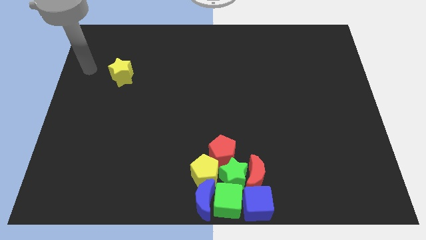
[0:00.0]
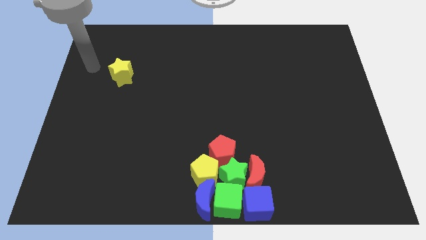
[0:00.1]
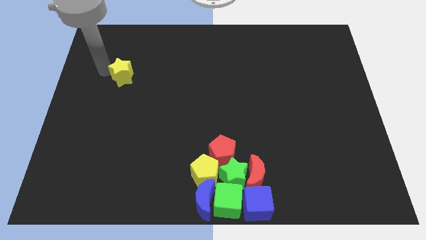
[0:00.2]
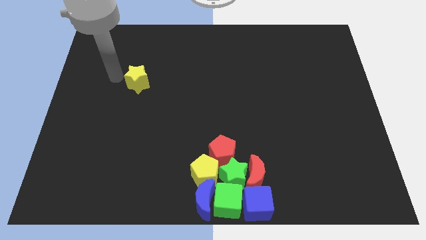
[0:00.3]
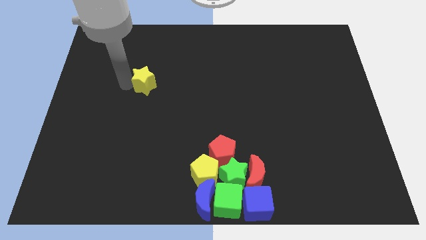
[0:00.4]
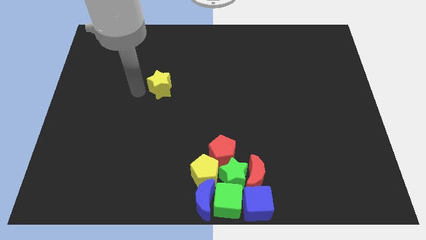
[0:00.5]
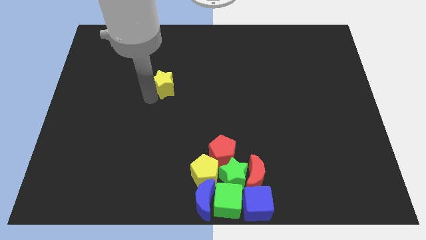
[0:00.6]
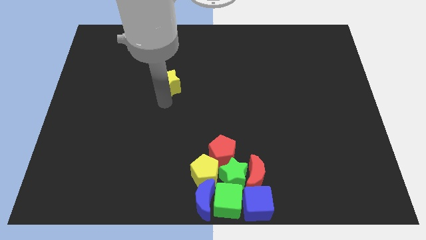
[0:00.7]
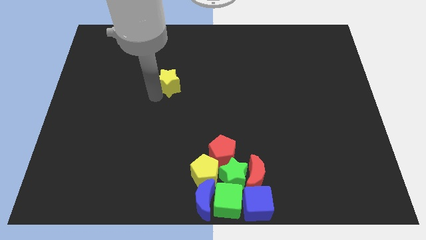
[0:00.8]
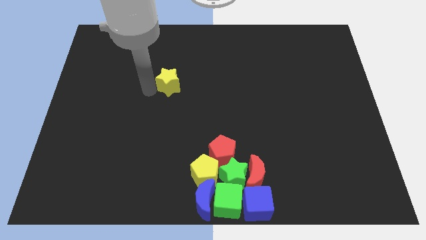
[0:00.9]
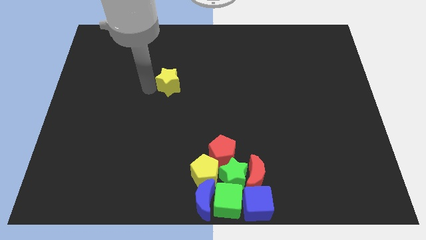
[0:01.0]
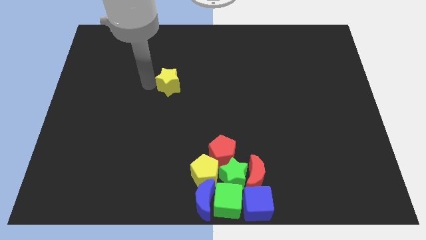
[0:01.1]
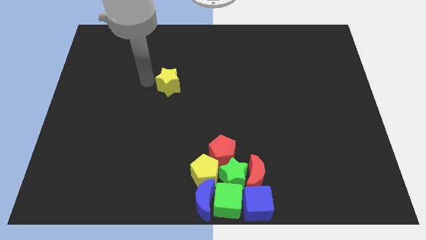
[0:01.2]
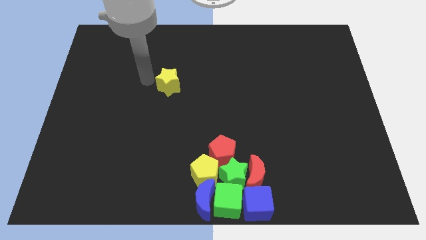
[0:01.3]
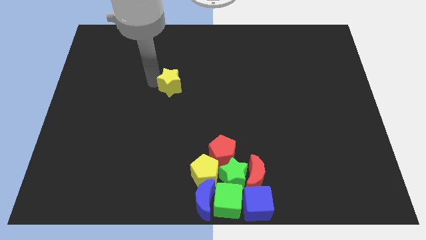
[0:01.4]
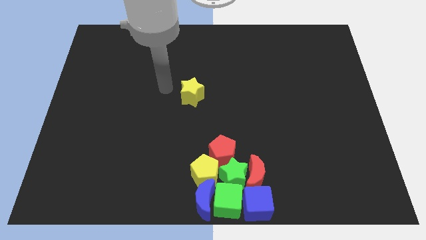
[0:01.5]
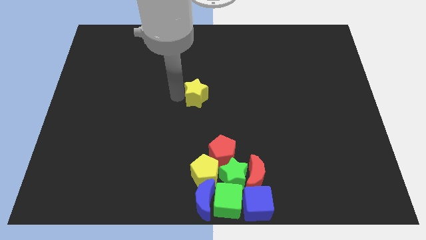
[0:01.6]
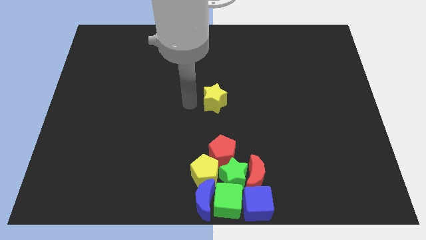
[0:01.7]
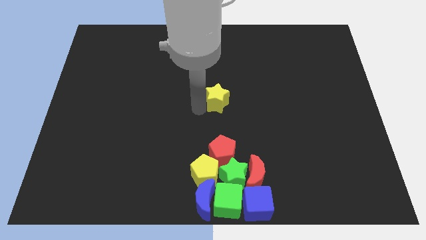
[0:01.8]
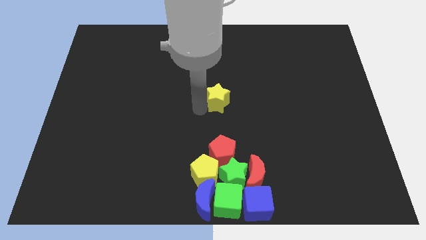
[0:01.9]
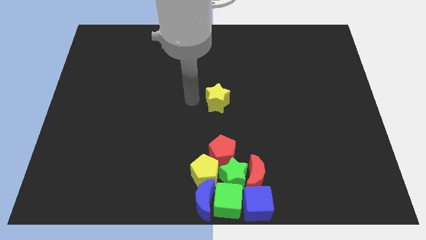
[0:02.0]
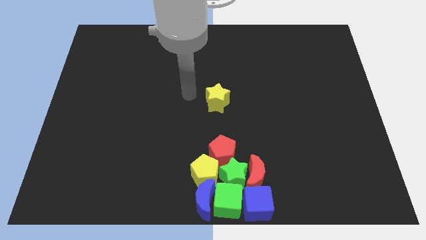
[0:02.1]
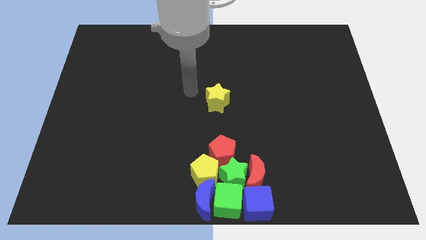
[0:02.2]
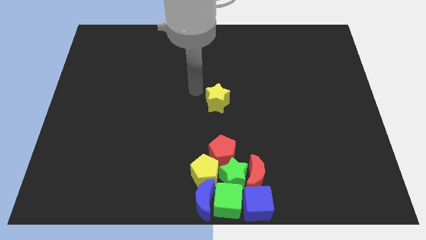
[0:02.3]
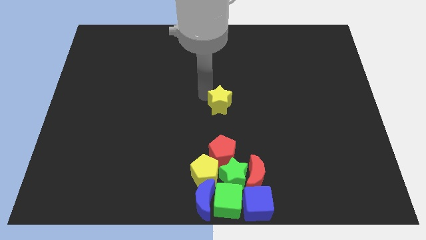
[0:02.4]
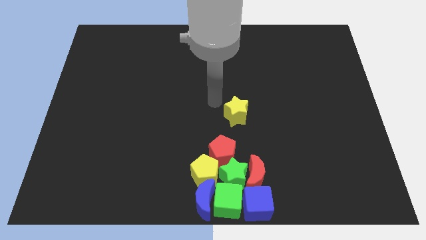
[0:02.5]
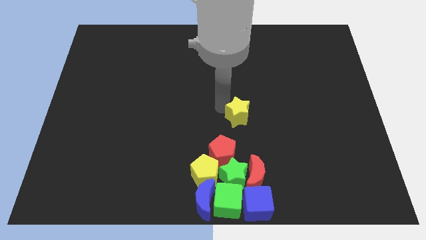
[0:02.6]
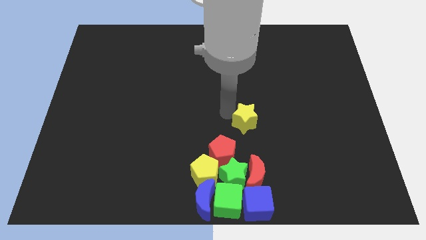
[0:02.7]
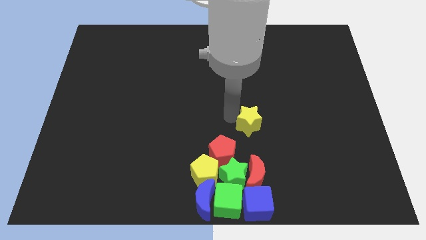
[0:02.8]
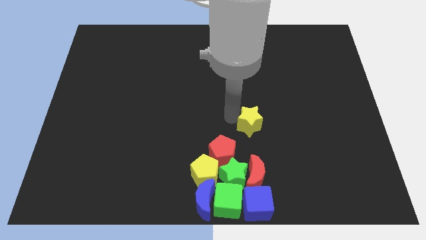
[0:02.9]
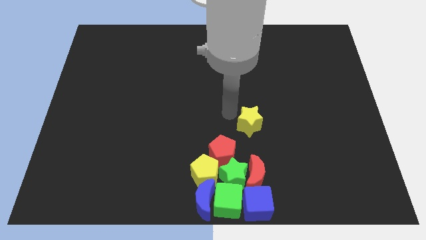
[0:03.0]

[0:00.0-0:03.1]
push the yellow star vertically above the red crescent

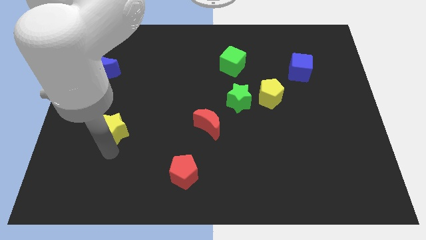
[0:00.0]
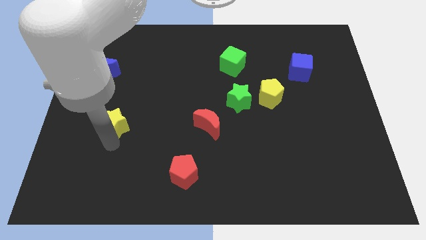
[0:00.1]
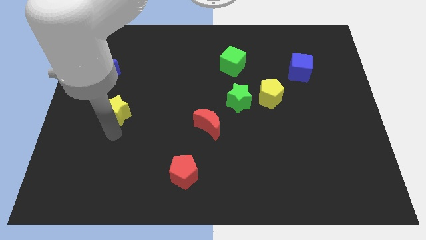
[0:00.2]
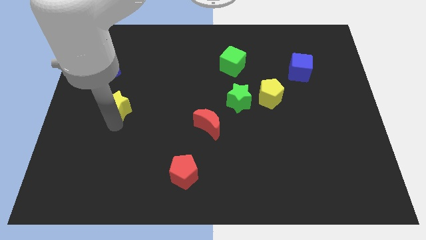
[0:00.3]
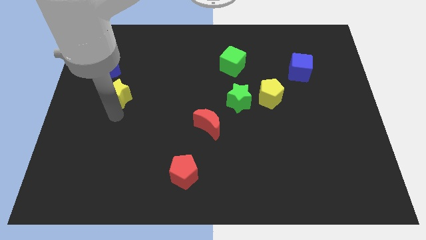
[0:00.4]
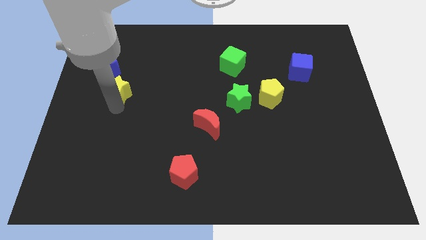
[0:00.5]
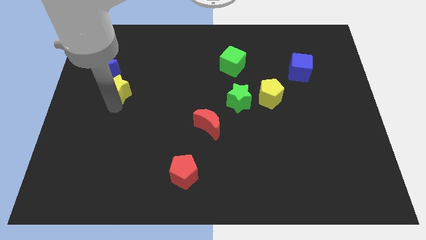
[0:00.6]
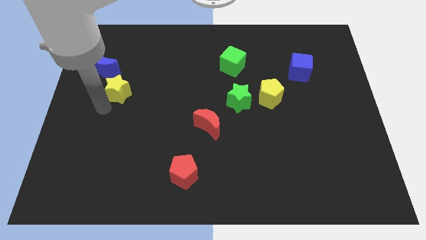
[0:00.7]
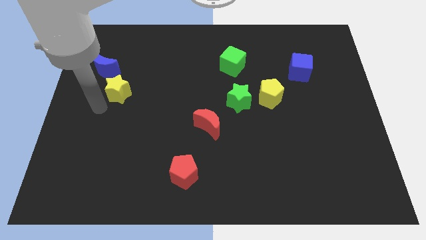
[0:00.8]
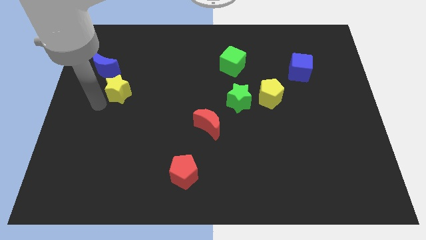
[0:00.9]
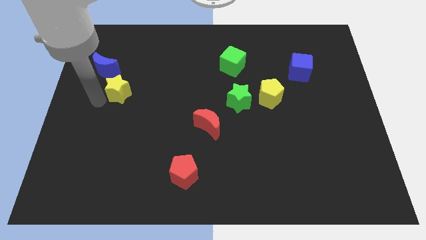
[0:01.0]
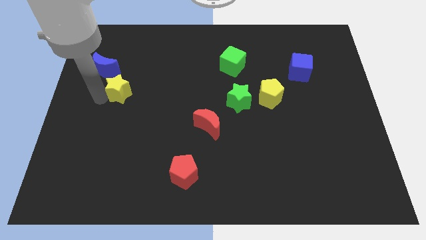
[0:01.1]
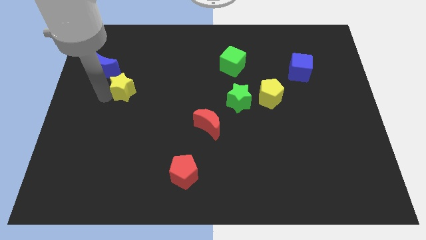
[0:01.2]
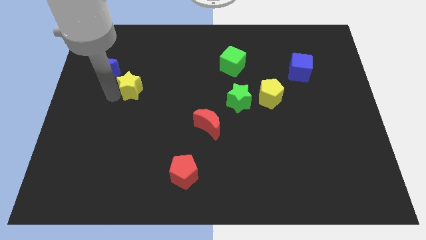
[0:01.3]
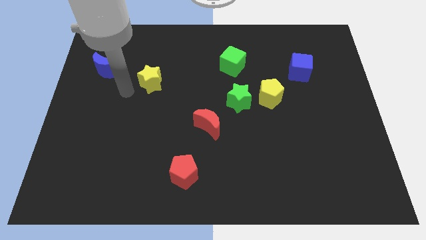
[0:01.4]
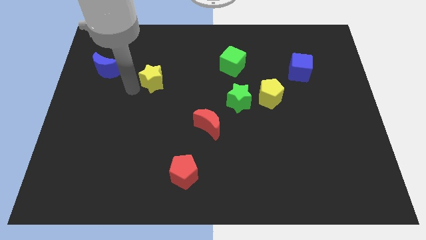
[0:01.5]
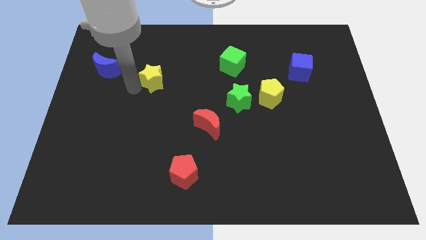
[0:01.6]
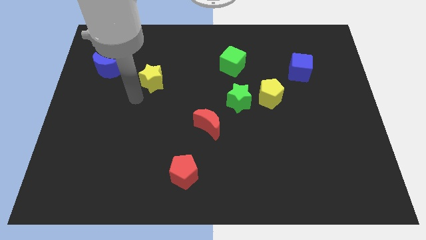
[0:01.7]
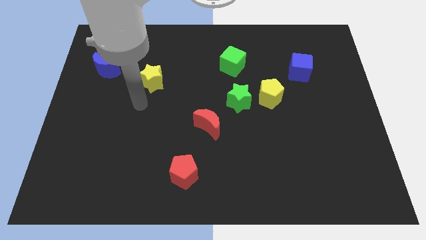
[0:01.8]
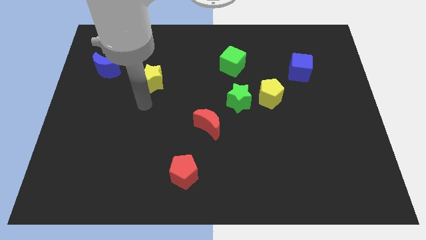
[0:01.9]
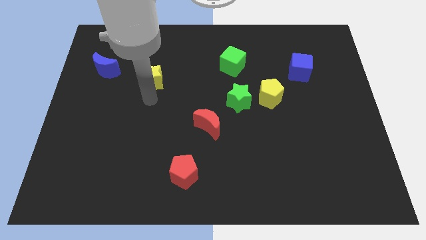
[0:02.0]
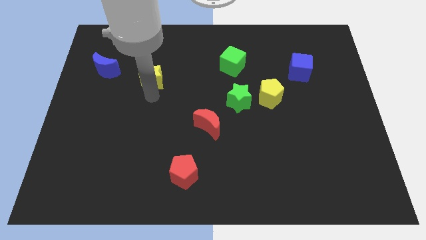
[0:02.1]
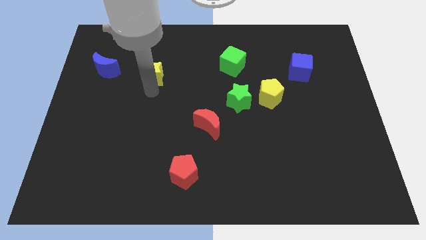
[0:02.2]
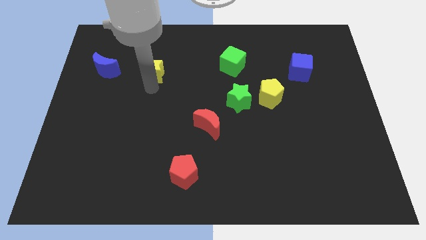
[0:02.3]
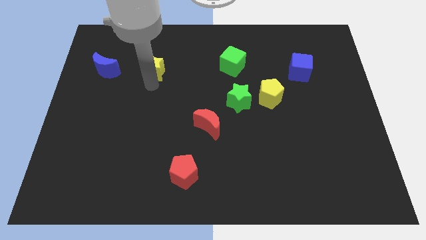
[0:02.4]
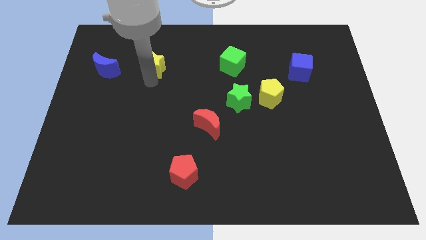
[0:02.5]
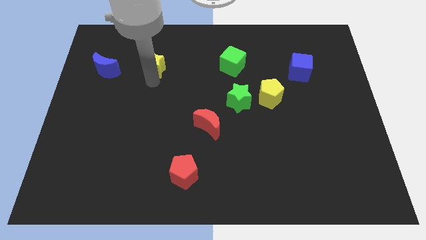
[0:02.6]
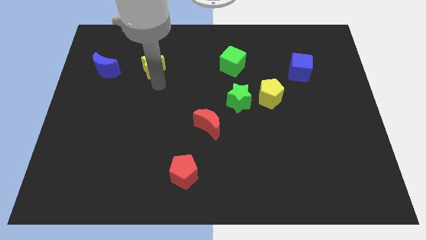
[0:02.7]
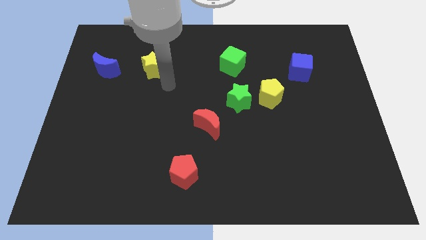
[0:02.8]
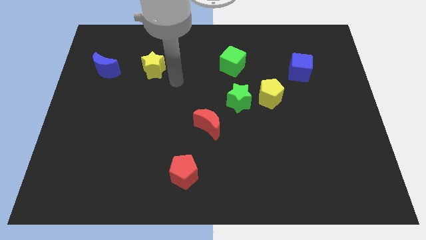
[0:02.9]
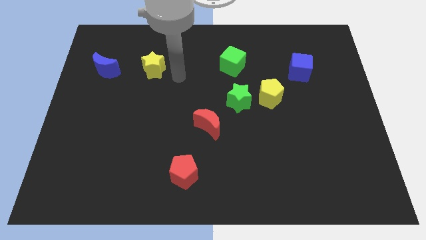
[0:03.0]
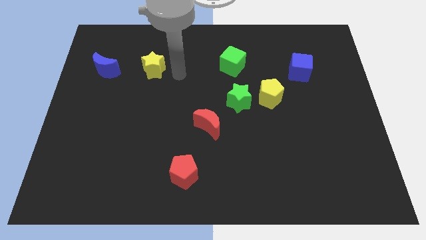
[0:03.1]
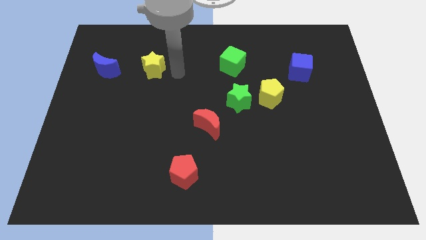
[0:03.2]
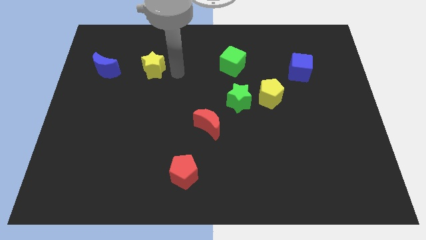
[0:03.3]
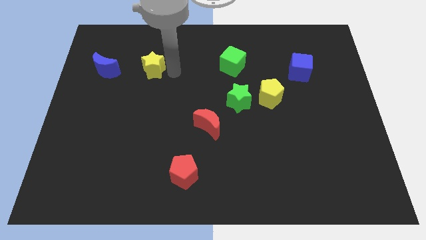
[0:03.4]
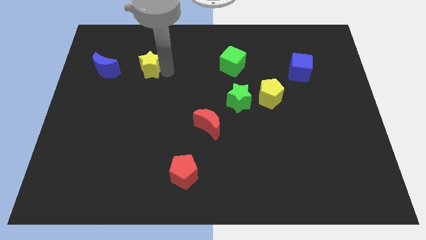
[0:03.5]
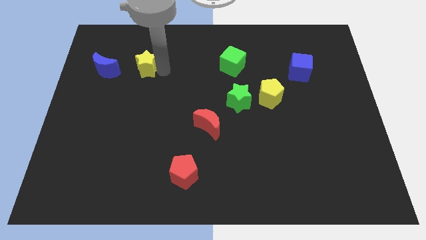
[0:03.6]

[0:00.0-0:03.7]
place yellow star to the right of blue crescent

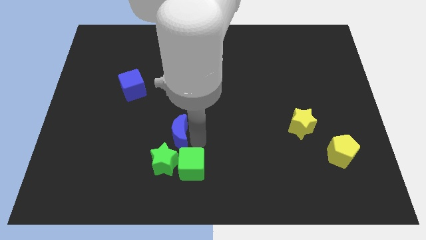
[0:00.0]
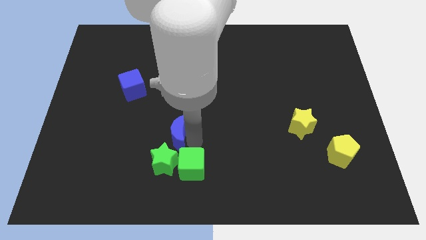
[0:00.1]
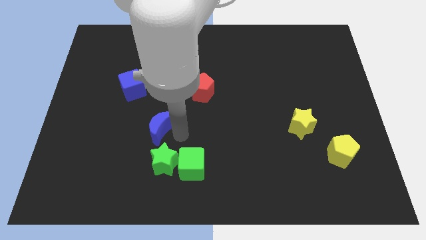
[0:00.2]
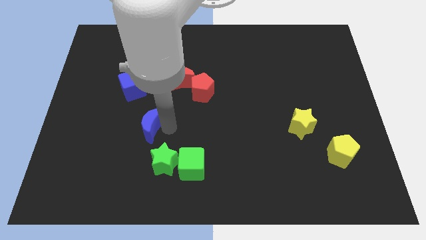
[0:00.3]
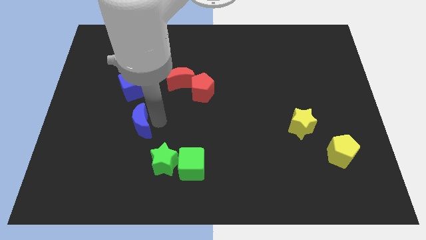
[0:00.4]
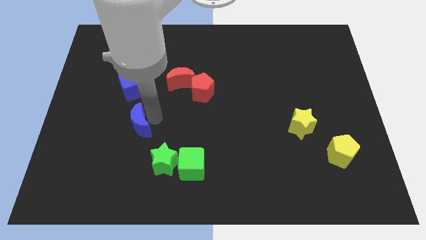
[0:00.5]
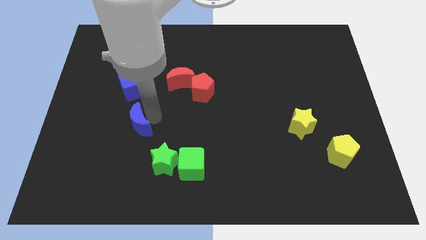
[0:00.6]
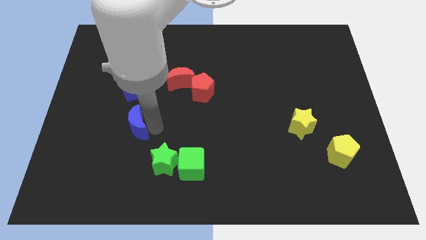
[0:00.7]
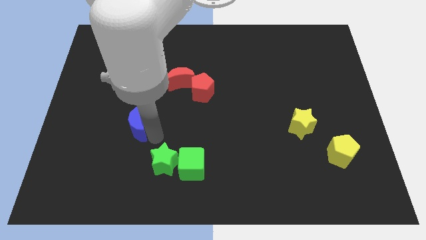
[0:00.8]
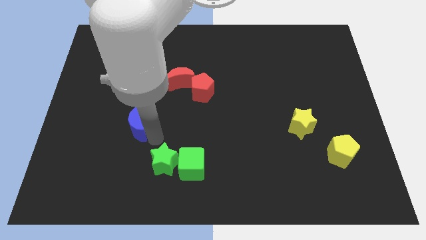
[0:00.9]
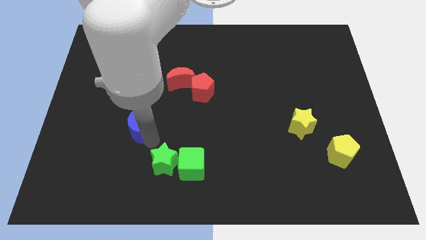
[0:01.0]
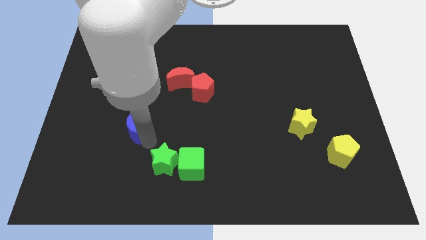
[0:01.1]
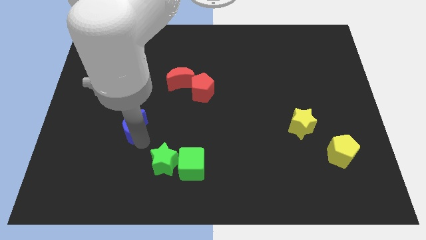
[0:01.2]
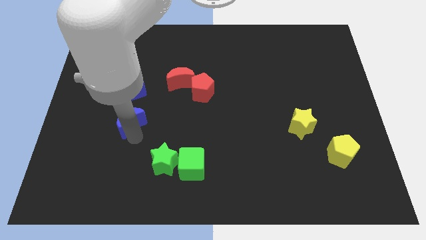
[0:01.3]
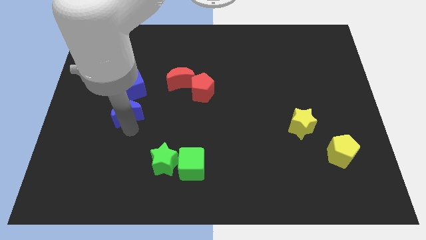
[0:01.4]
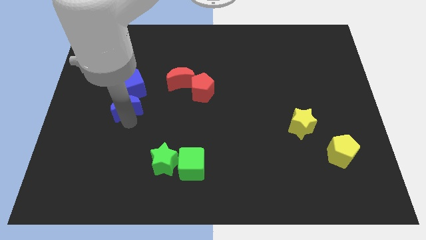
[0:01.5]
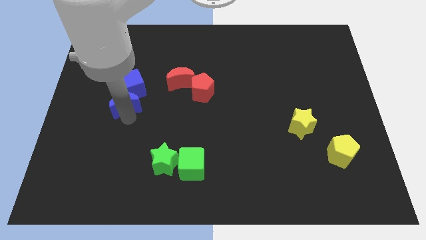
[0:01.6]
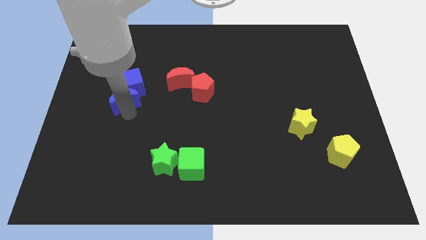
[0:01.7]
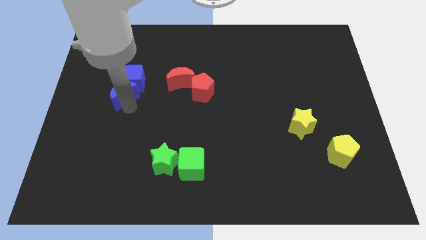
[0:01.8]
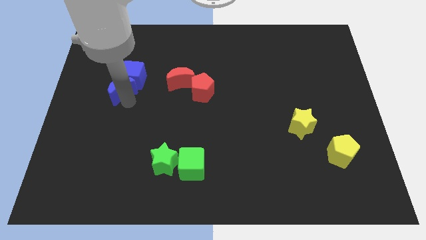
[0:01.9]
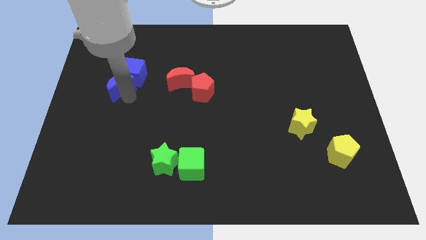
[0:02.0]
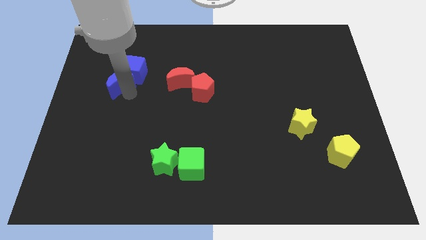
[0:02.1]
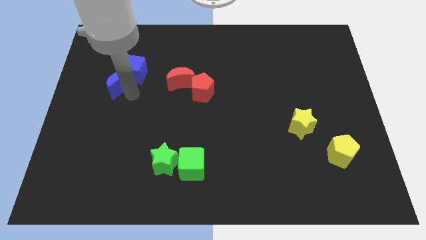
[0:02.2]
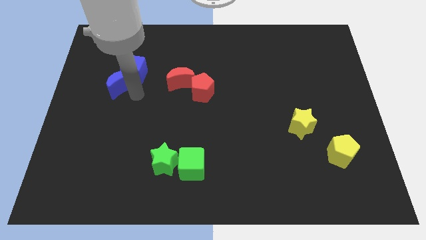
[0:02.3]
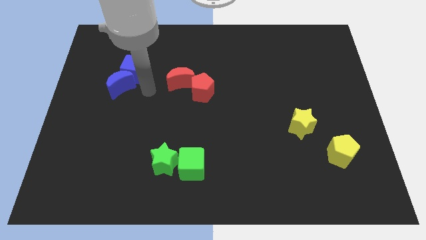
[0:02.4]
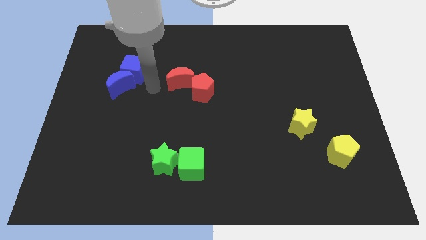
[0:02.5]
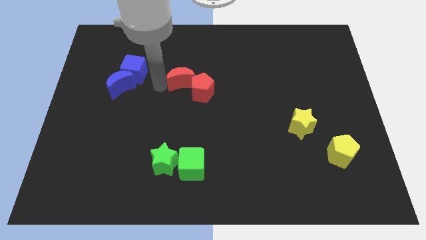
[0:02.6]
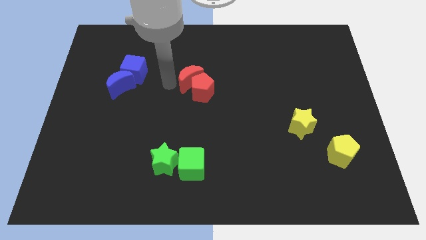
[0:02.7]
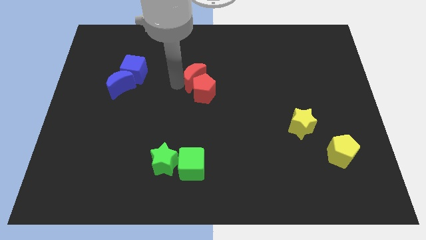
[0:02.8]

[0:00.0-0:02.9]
push the blue crescent into the blue cube
